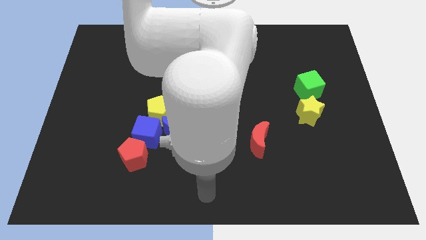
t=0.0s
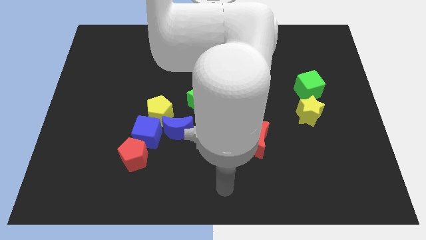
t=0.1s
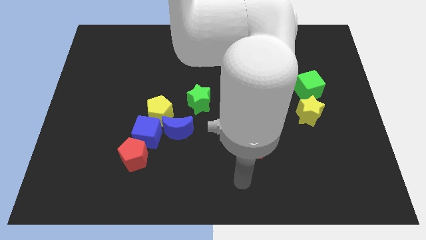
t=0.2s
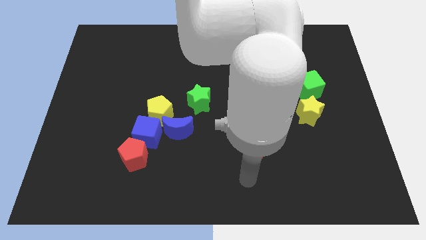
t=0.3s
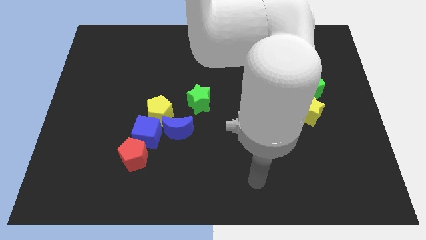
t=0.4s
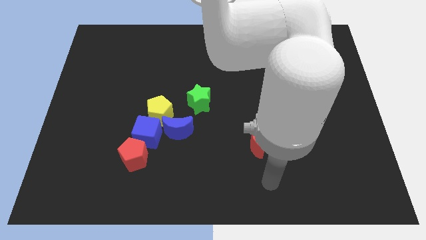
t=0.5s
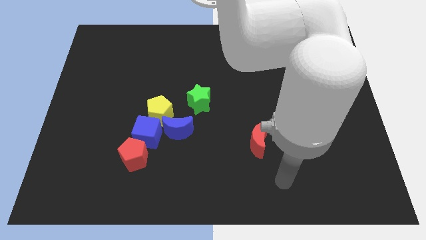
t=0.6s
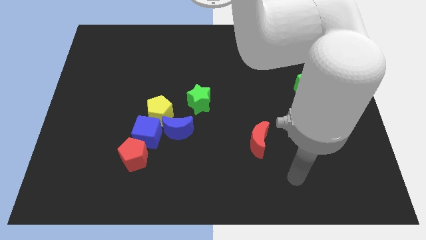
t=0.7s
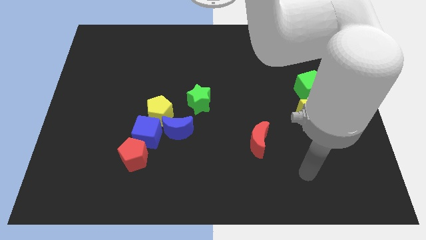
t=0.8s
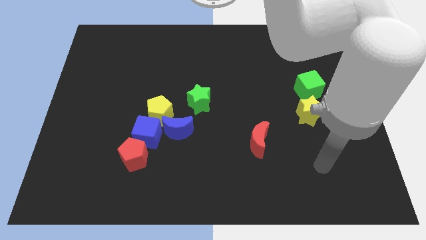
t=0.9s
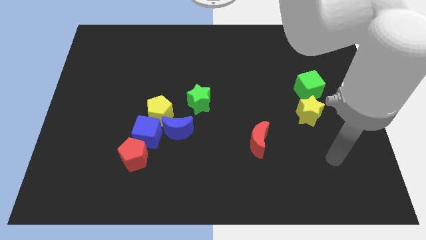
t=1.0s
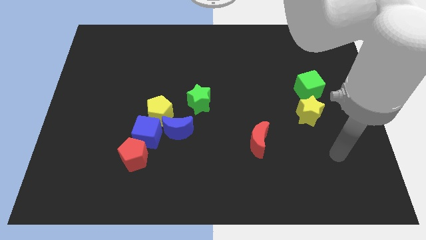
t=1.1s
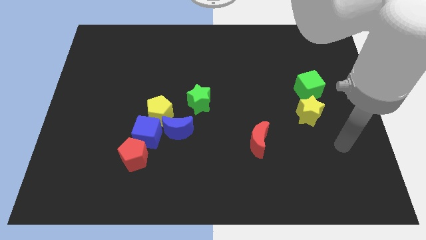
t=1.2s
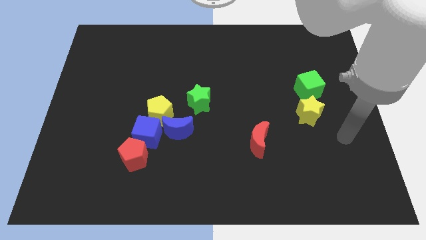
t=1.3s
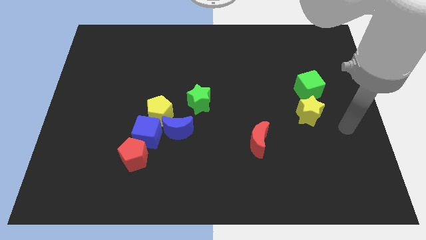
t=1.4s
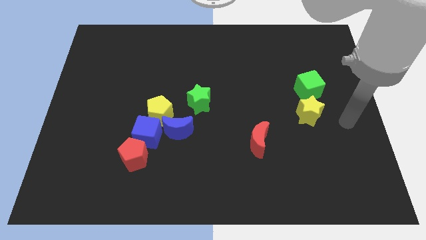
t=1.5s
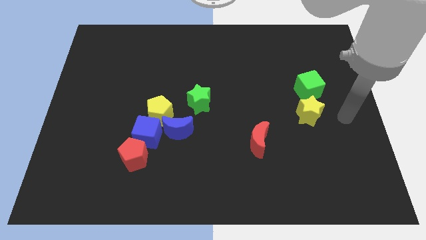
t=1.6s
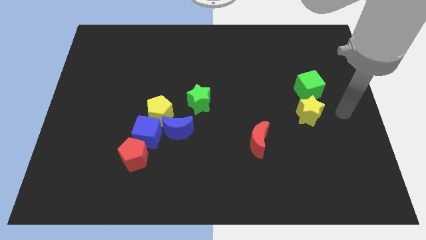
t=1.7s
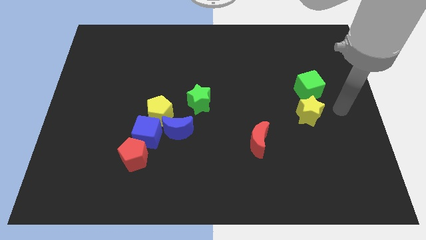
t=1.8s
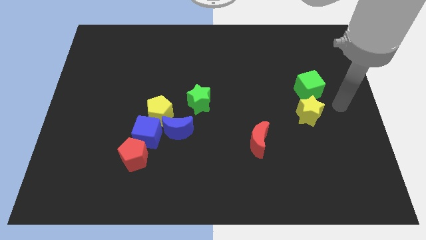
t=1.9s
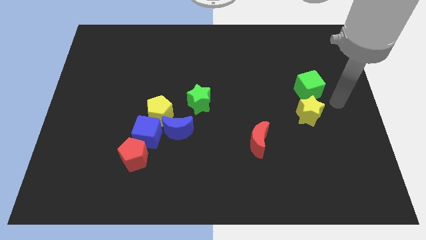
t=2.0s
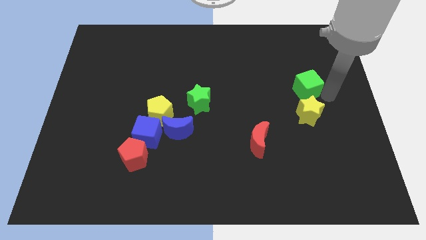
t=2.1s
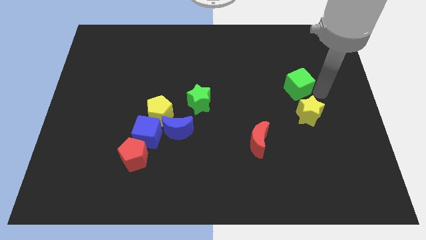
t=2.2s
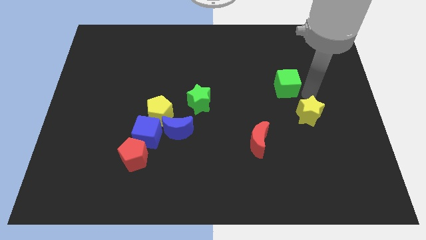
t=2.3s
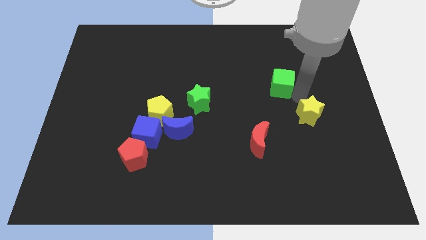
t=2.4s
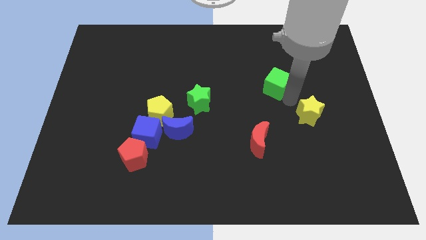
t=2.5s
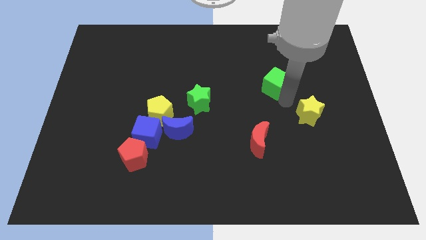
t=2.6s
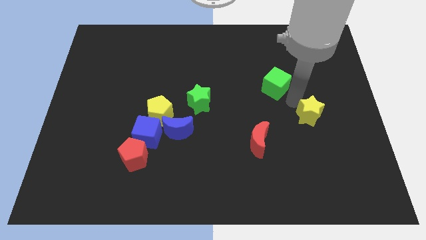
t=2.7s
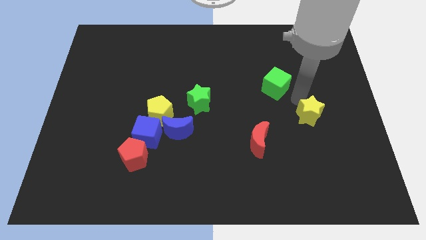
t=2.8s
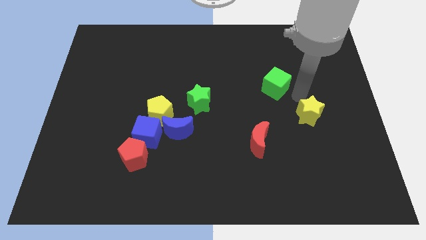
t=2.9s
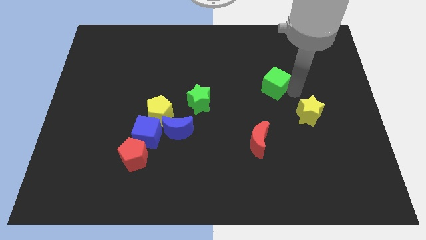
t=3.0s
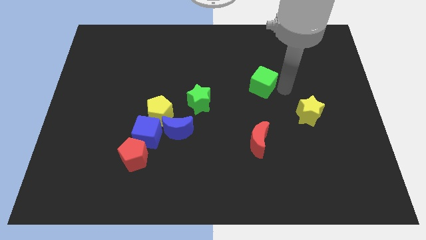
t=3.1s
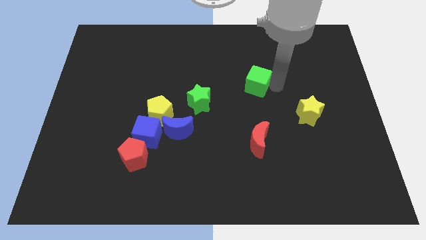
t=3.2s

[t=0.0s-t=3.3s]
place the green cube vertically above the red moon

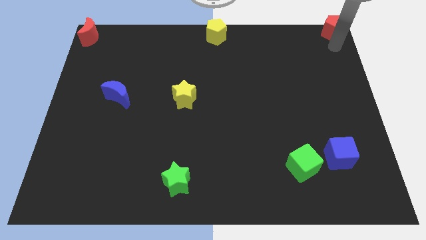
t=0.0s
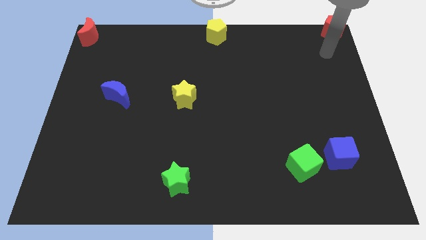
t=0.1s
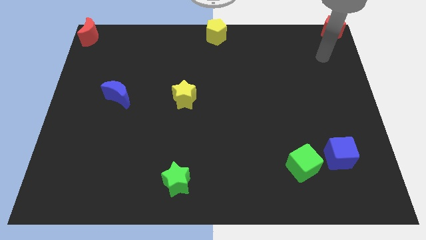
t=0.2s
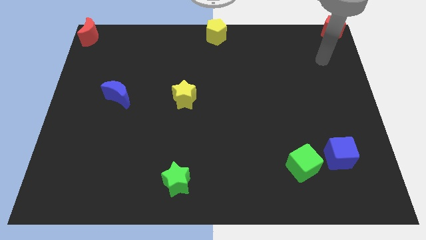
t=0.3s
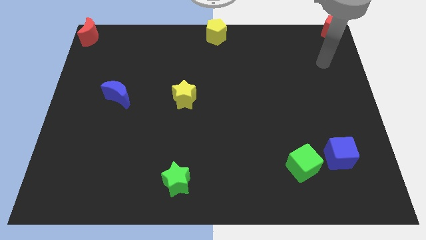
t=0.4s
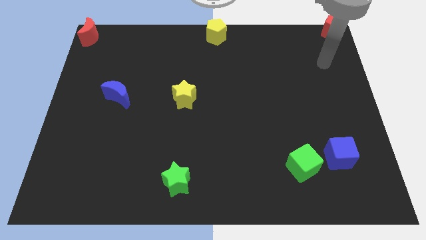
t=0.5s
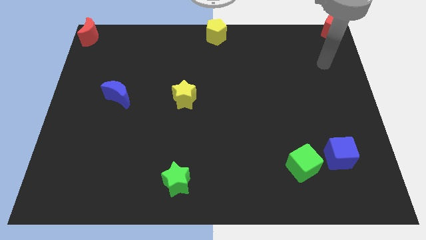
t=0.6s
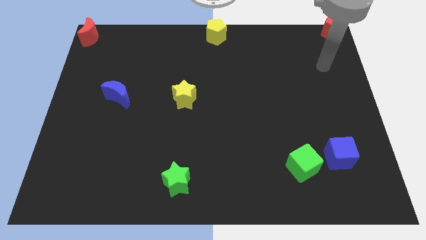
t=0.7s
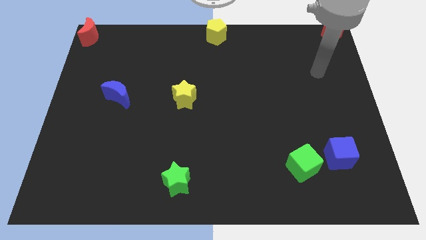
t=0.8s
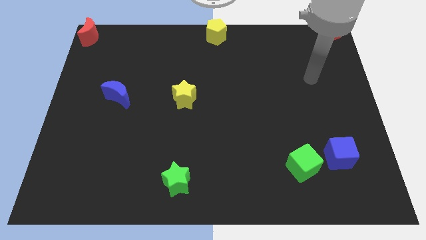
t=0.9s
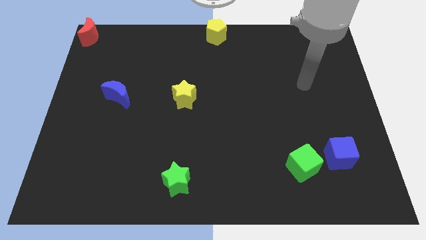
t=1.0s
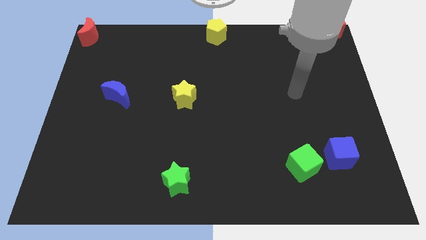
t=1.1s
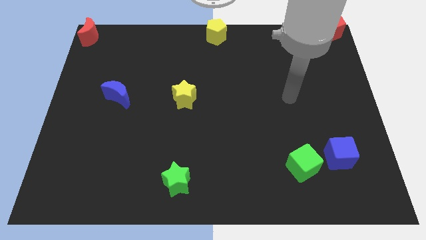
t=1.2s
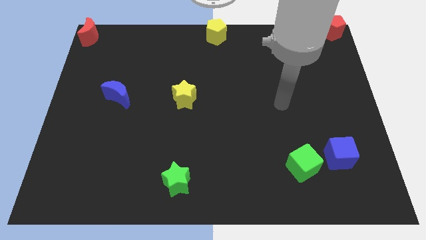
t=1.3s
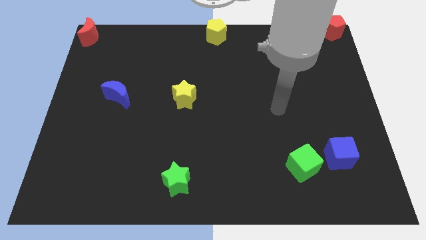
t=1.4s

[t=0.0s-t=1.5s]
move your arm away from red pentagon

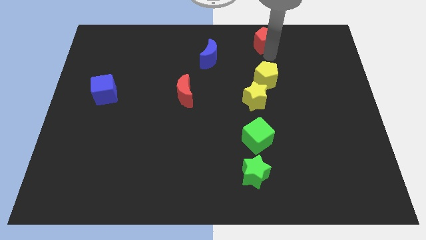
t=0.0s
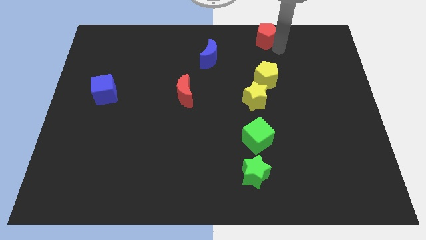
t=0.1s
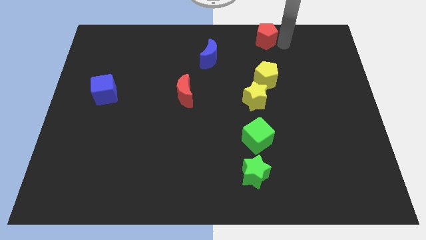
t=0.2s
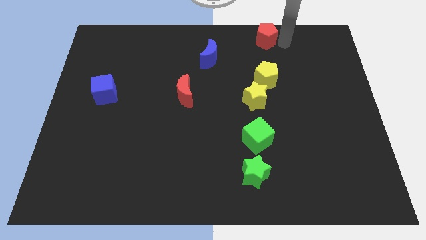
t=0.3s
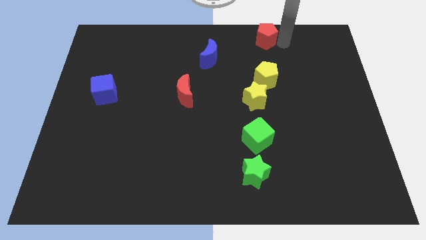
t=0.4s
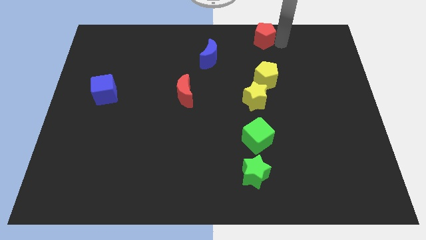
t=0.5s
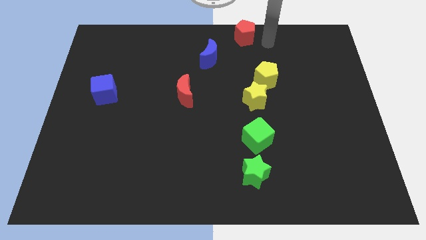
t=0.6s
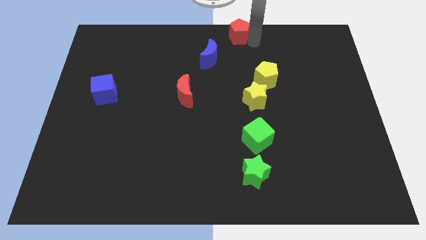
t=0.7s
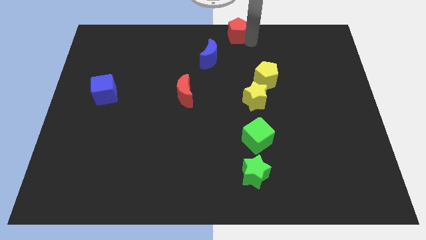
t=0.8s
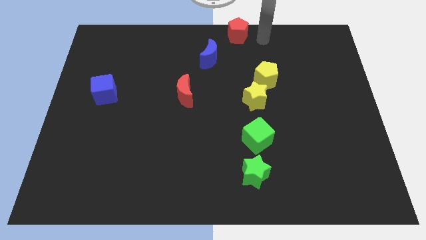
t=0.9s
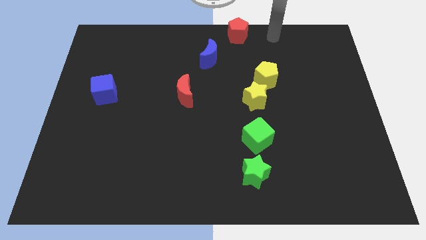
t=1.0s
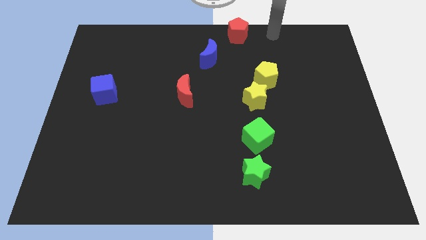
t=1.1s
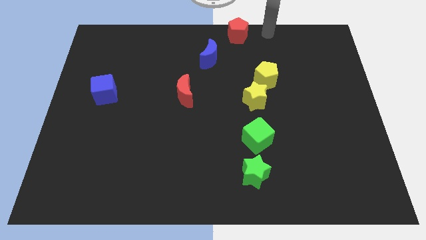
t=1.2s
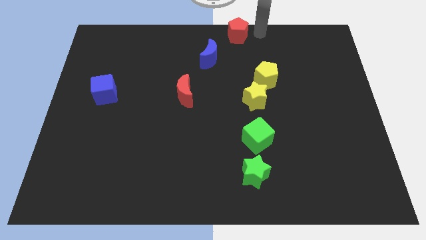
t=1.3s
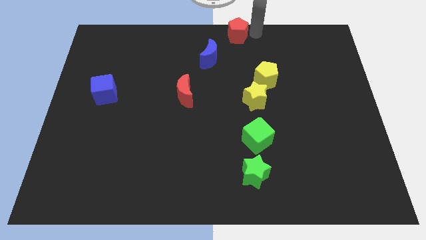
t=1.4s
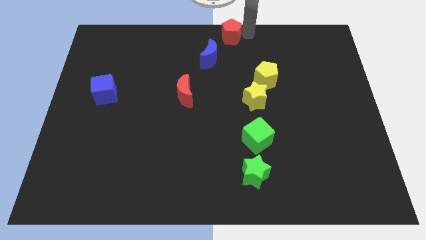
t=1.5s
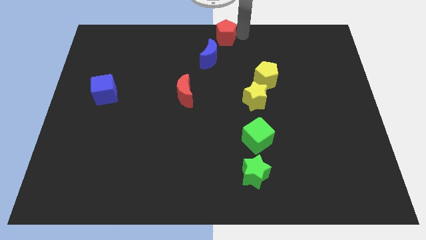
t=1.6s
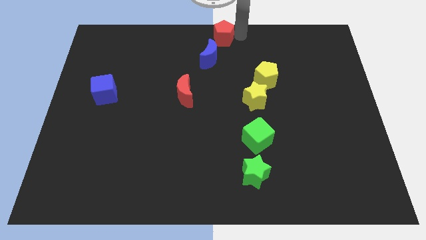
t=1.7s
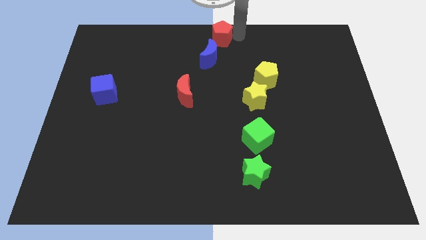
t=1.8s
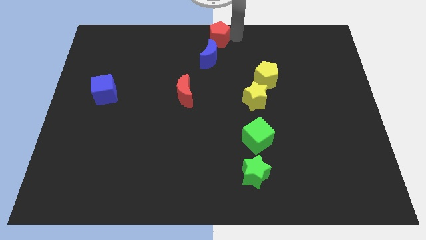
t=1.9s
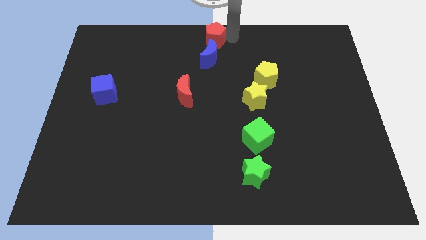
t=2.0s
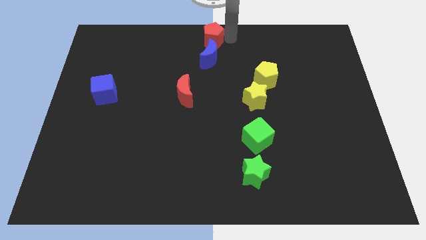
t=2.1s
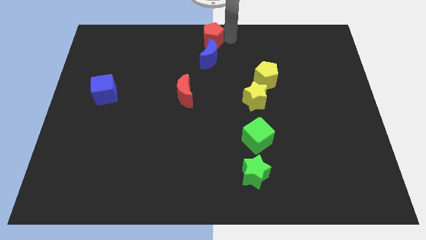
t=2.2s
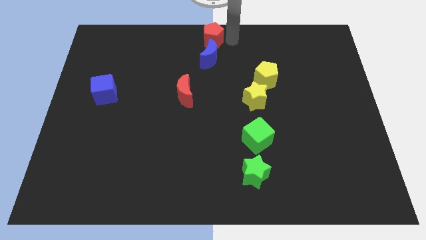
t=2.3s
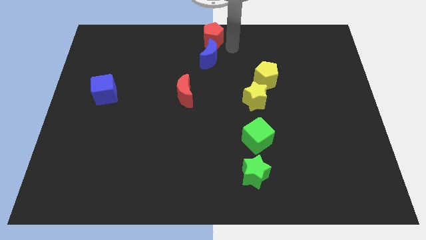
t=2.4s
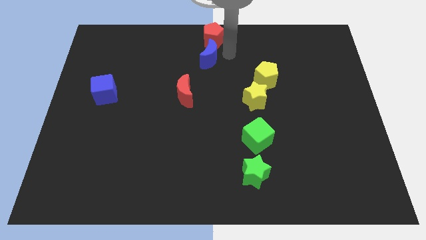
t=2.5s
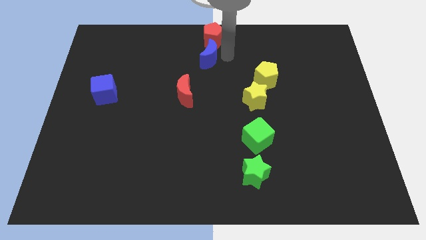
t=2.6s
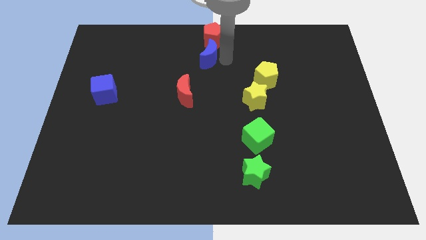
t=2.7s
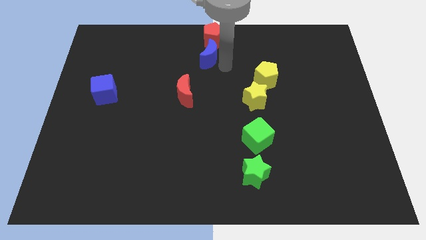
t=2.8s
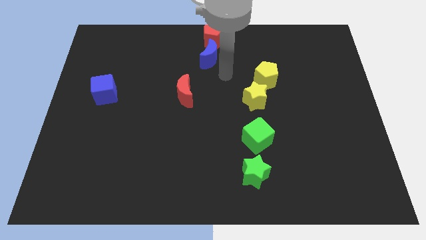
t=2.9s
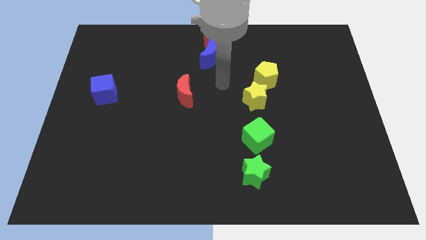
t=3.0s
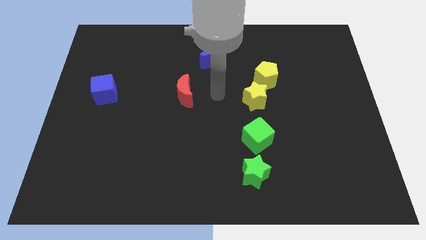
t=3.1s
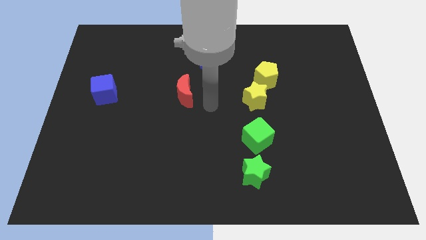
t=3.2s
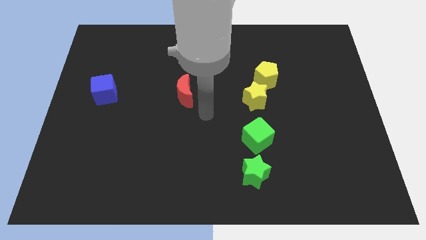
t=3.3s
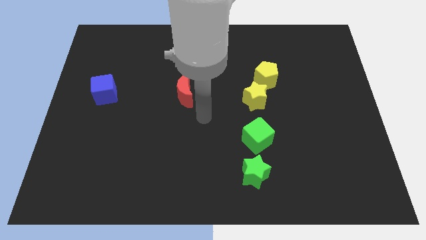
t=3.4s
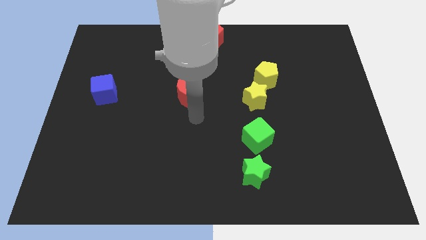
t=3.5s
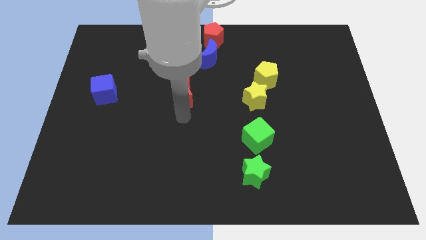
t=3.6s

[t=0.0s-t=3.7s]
place the red pentagon at the top center of the board

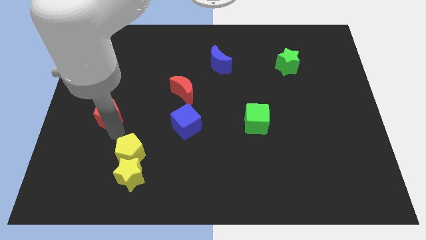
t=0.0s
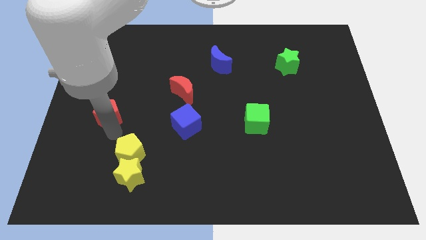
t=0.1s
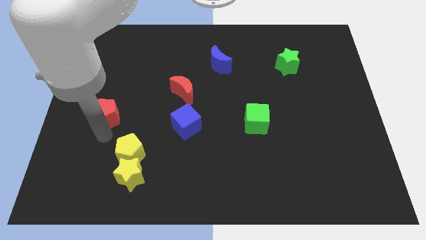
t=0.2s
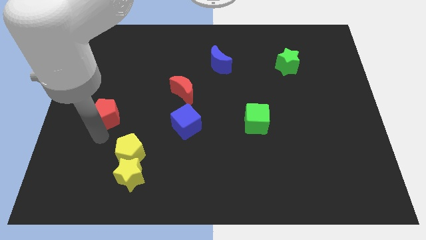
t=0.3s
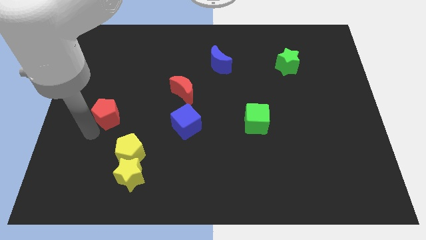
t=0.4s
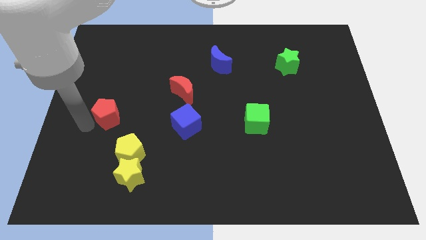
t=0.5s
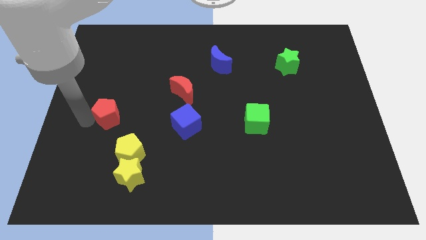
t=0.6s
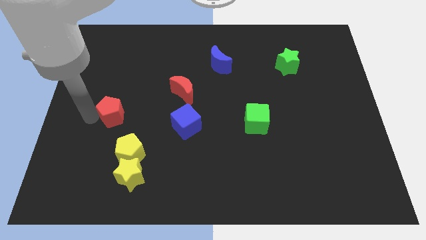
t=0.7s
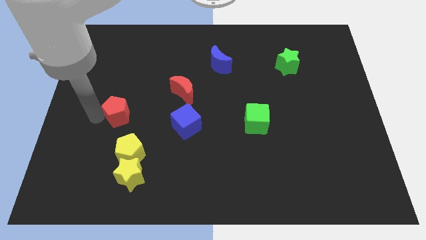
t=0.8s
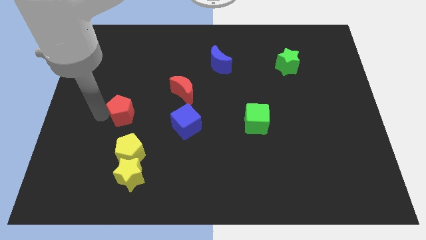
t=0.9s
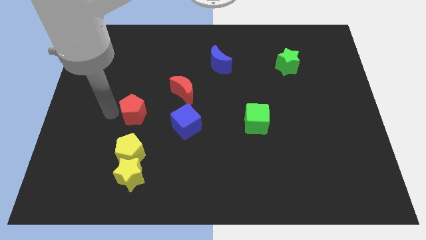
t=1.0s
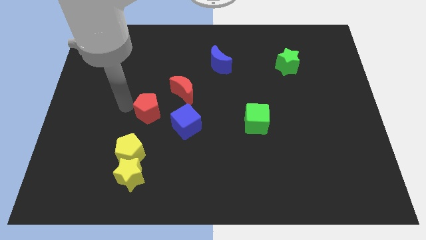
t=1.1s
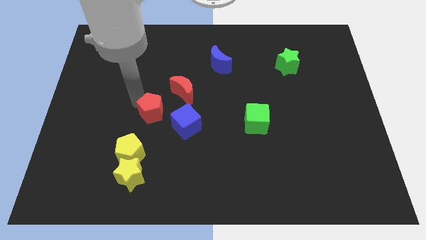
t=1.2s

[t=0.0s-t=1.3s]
move red pentagon towards red crescent
